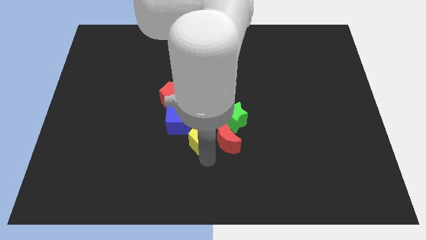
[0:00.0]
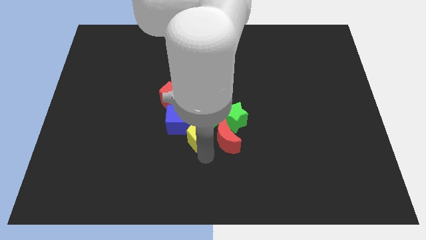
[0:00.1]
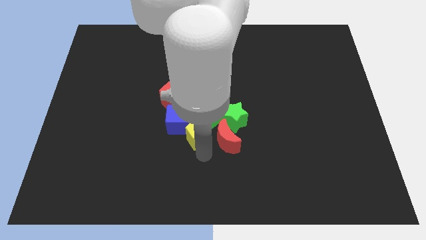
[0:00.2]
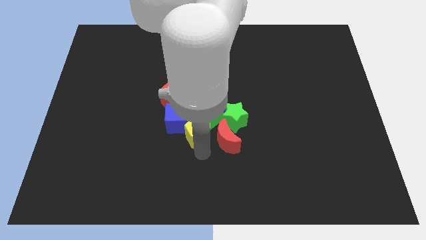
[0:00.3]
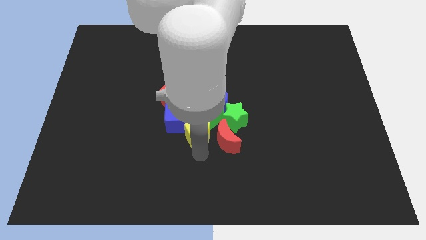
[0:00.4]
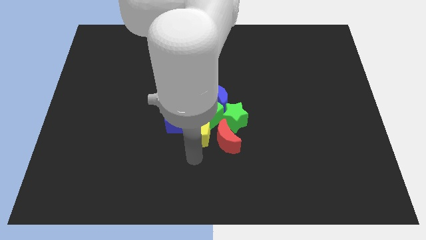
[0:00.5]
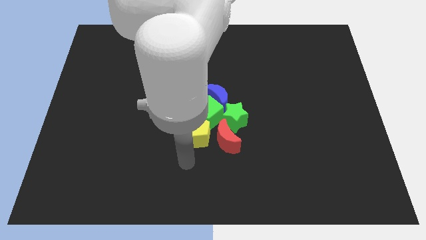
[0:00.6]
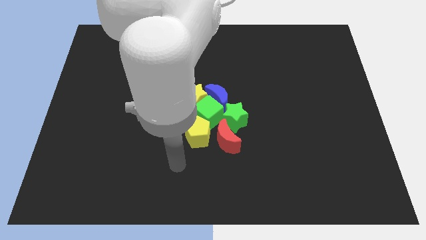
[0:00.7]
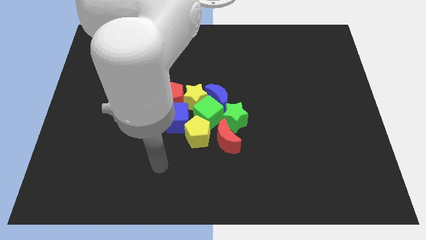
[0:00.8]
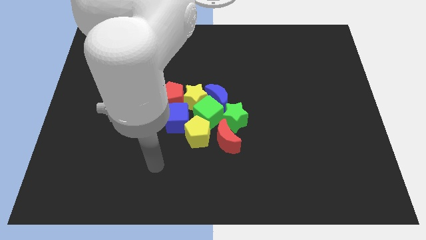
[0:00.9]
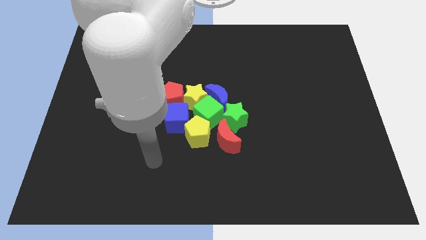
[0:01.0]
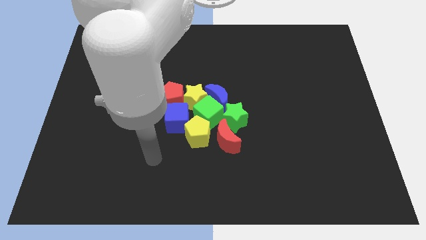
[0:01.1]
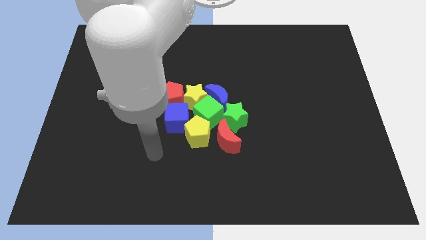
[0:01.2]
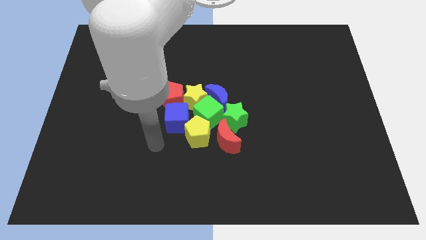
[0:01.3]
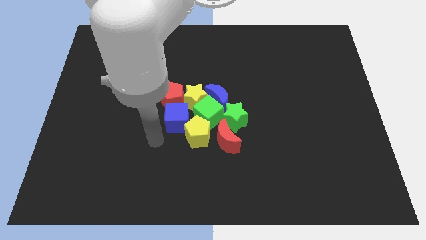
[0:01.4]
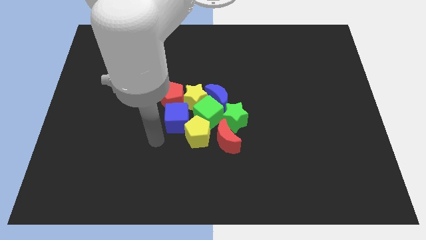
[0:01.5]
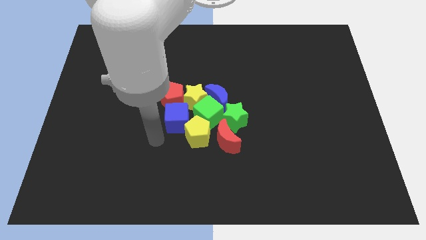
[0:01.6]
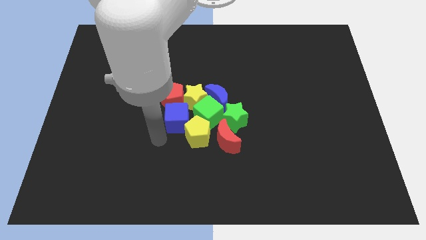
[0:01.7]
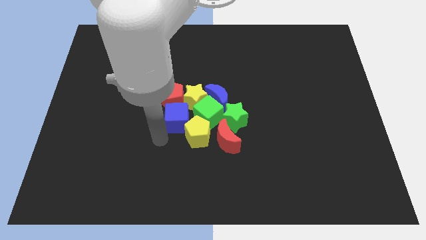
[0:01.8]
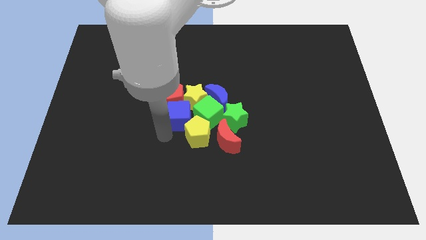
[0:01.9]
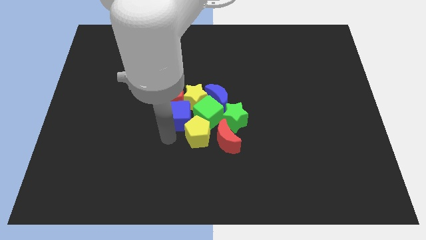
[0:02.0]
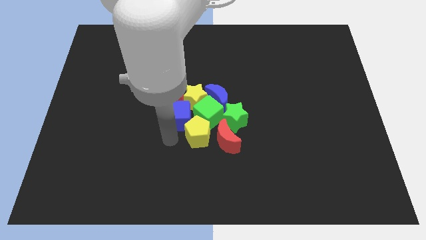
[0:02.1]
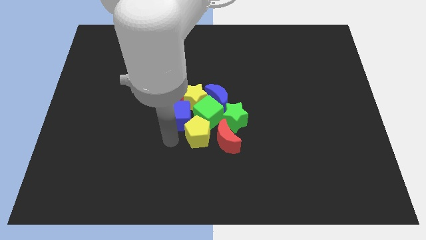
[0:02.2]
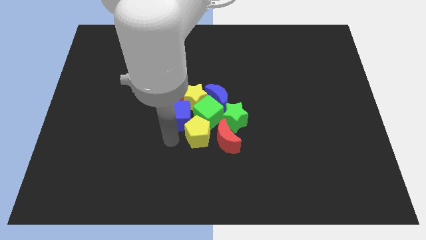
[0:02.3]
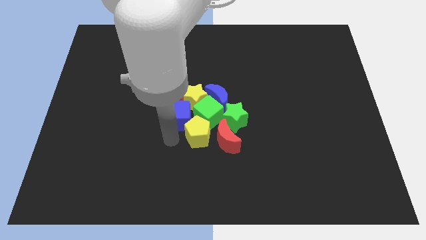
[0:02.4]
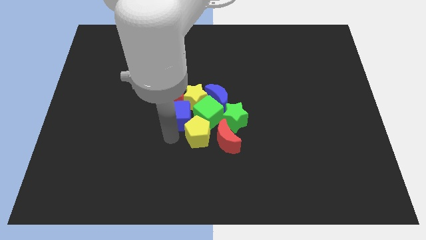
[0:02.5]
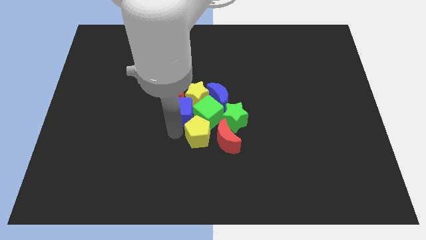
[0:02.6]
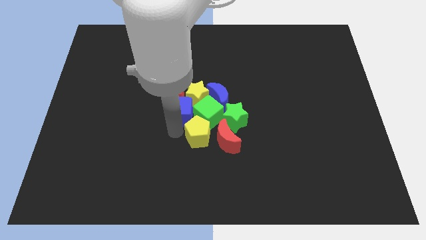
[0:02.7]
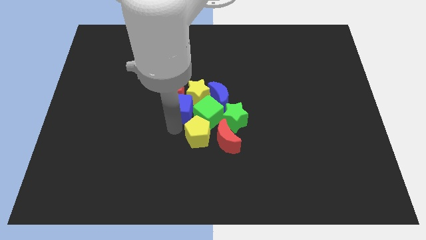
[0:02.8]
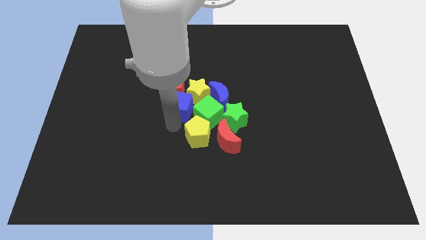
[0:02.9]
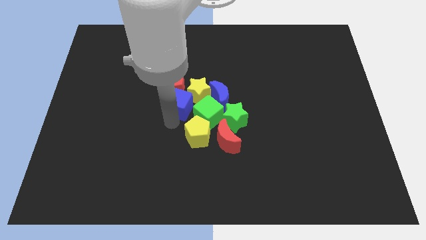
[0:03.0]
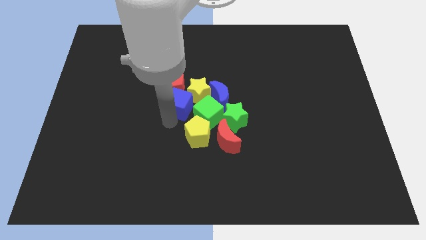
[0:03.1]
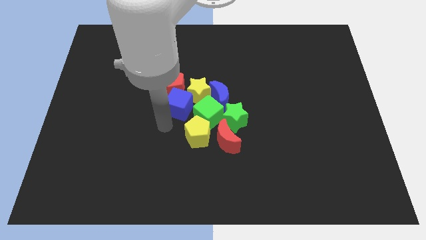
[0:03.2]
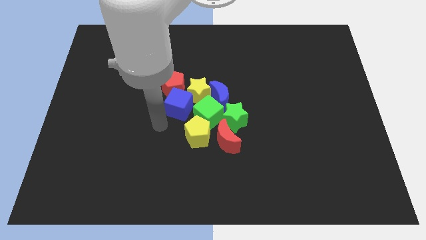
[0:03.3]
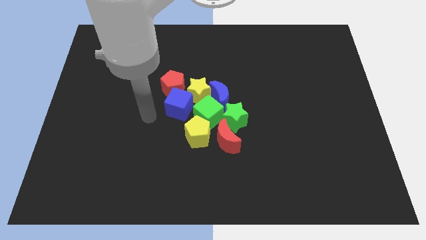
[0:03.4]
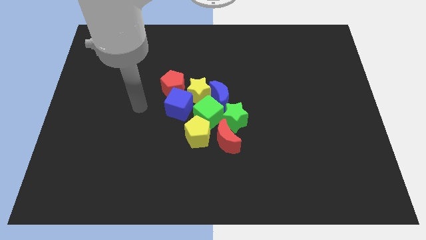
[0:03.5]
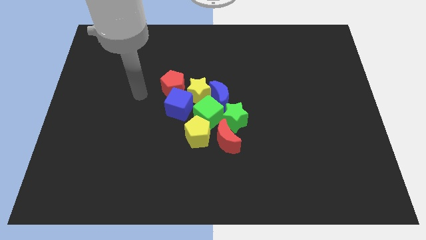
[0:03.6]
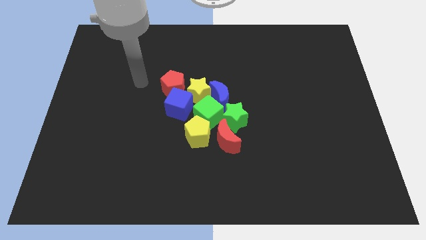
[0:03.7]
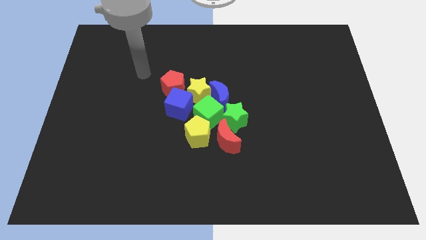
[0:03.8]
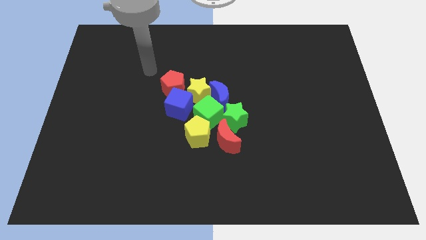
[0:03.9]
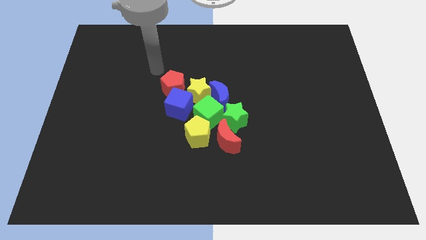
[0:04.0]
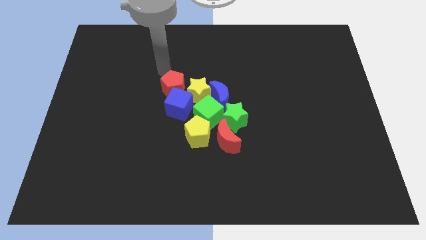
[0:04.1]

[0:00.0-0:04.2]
move the blue cube to the center

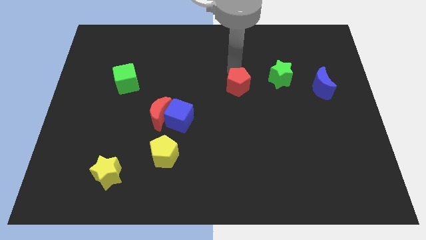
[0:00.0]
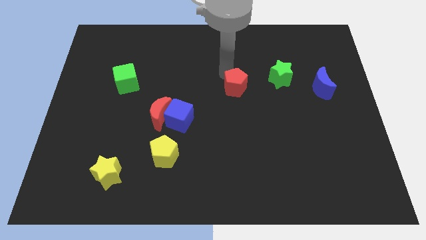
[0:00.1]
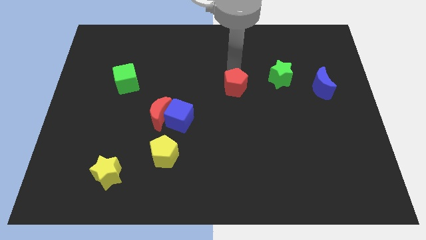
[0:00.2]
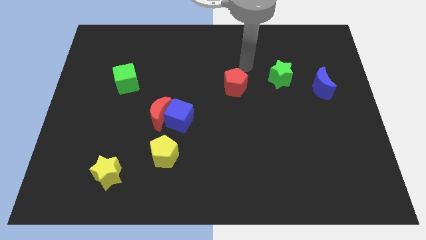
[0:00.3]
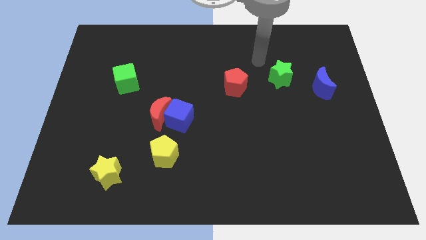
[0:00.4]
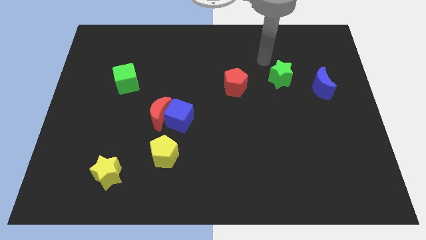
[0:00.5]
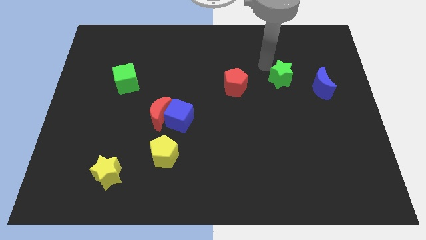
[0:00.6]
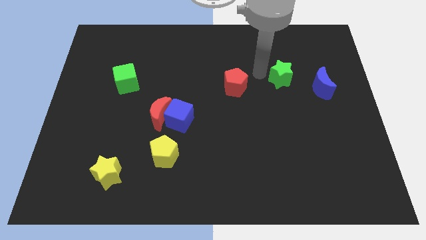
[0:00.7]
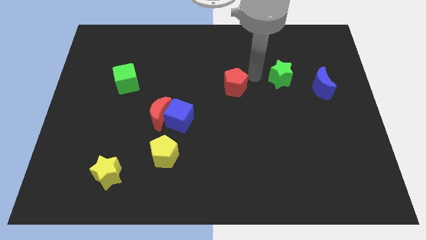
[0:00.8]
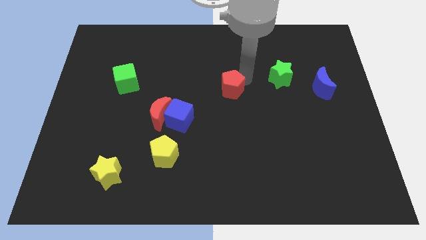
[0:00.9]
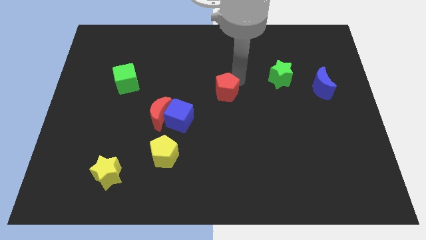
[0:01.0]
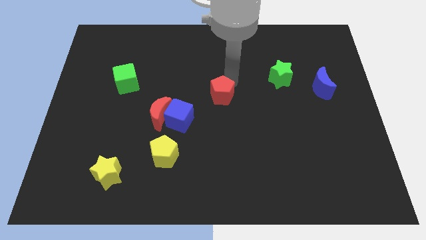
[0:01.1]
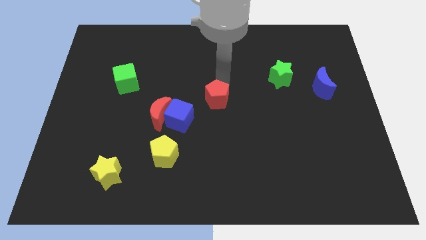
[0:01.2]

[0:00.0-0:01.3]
move the red pentagon to the center of the board

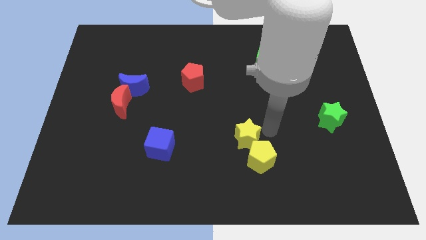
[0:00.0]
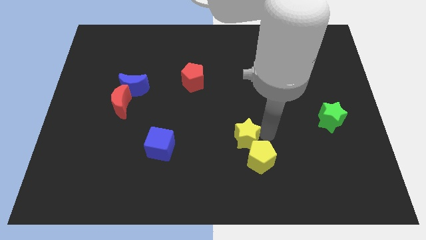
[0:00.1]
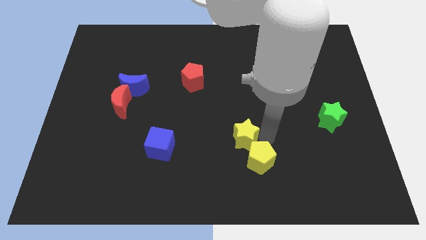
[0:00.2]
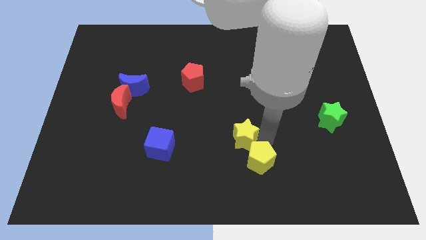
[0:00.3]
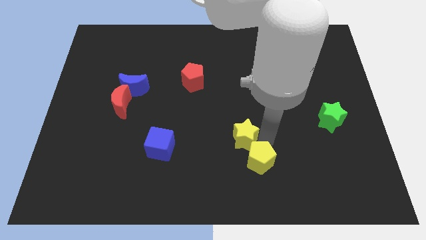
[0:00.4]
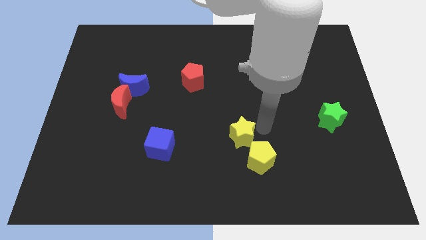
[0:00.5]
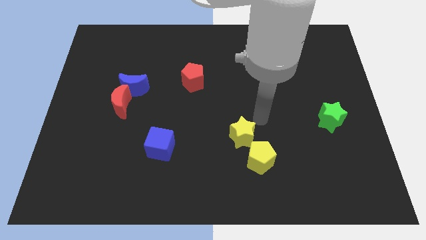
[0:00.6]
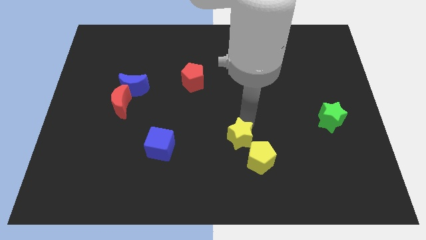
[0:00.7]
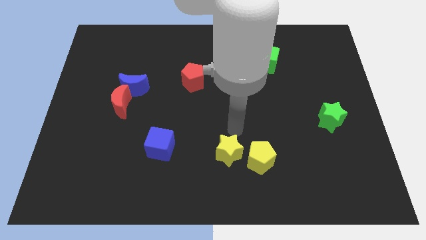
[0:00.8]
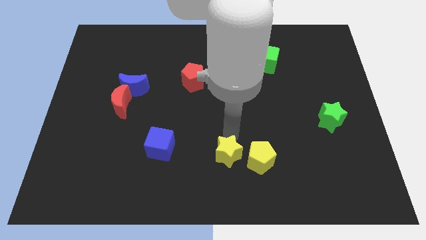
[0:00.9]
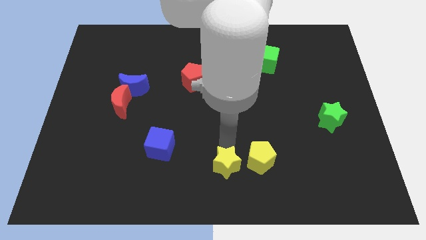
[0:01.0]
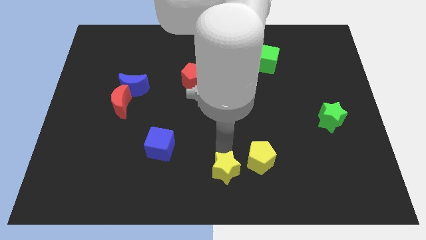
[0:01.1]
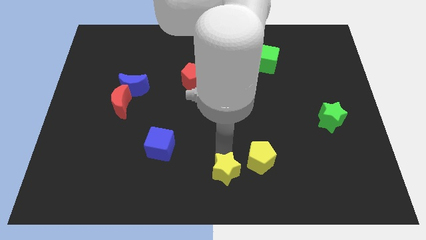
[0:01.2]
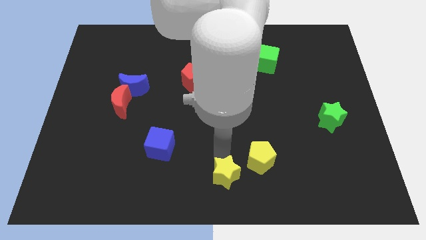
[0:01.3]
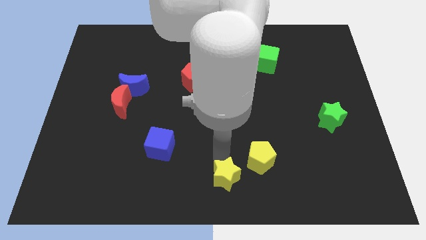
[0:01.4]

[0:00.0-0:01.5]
separate the yellow star and yellow pentagon

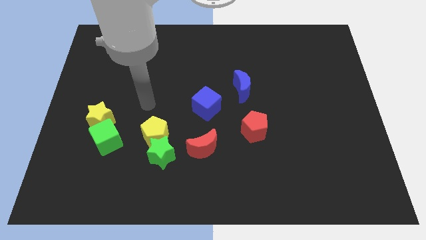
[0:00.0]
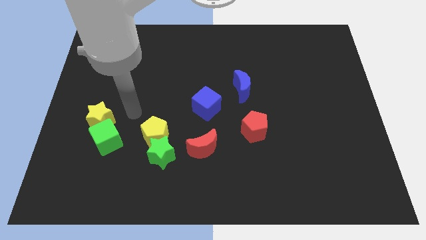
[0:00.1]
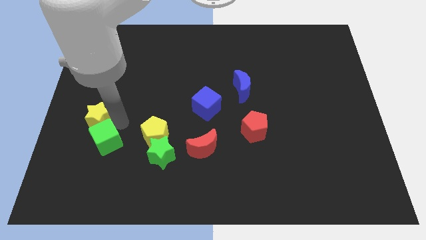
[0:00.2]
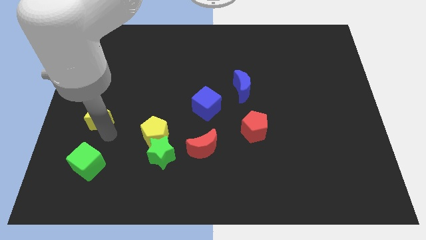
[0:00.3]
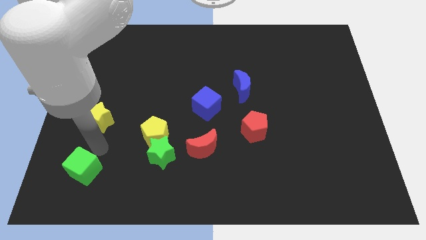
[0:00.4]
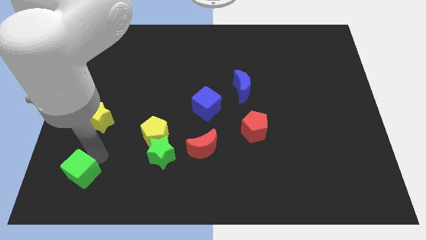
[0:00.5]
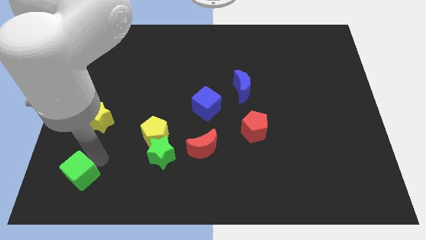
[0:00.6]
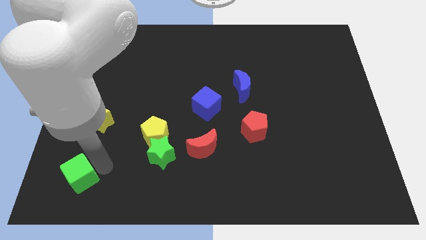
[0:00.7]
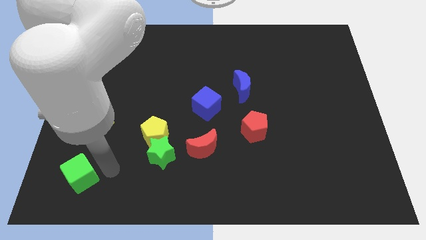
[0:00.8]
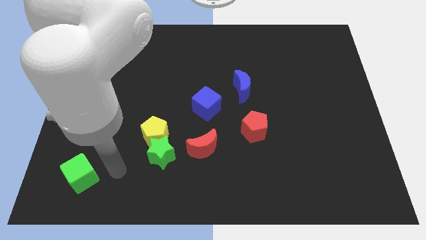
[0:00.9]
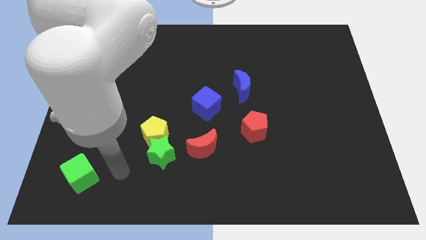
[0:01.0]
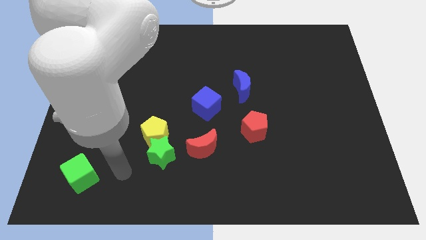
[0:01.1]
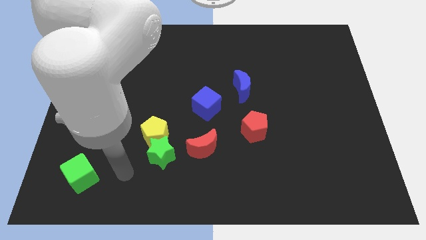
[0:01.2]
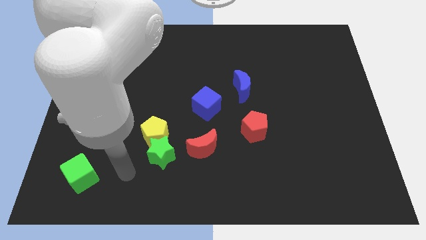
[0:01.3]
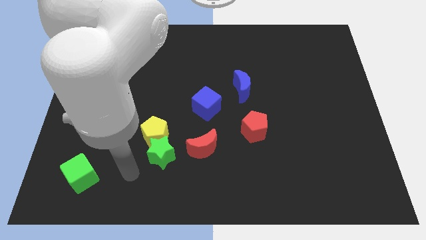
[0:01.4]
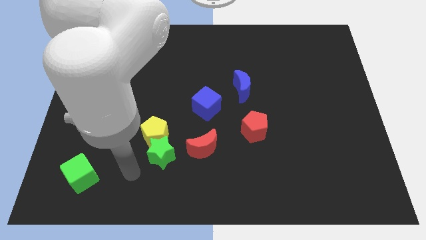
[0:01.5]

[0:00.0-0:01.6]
push the green cube to the bottom left corner of the board

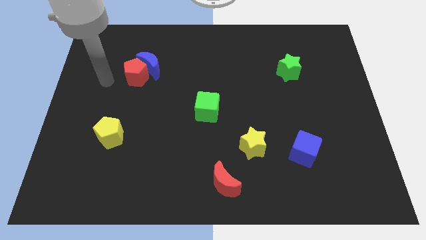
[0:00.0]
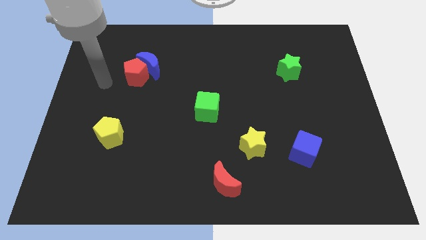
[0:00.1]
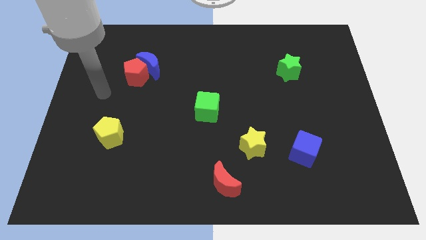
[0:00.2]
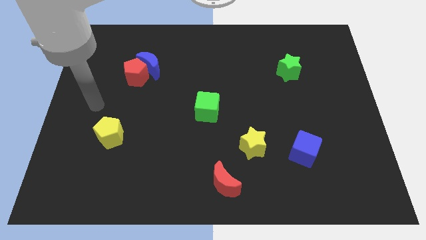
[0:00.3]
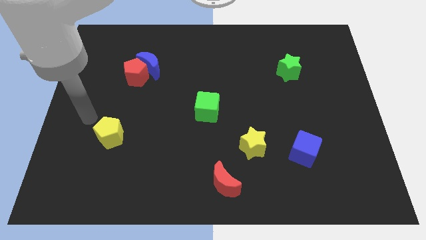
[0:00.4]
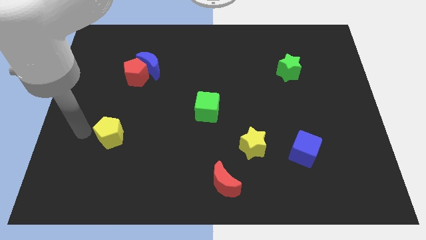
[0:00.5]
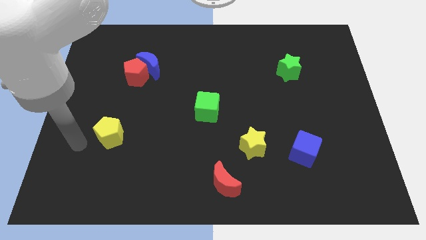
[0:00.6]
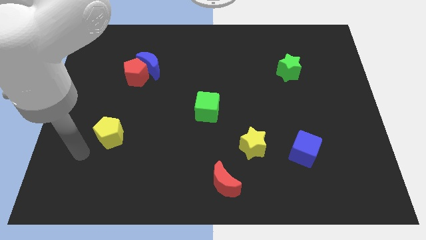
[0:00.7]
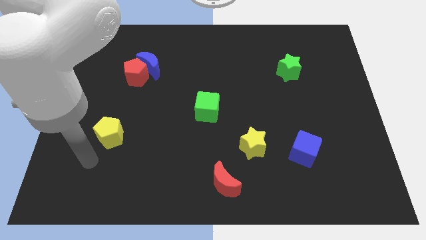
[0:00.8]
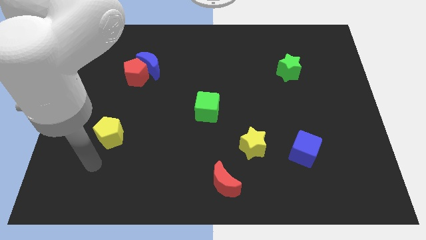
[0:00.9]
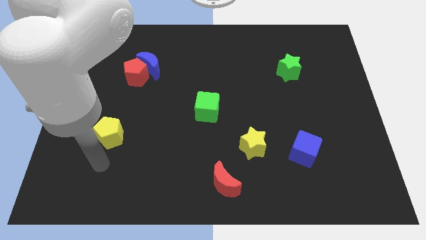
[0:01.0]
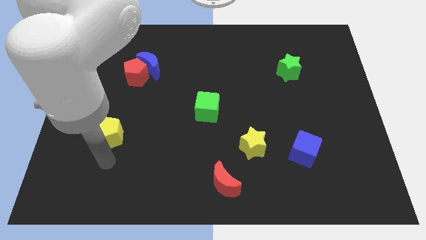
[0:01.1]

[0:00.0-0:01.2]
point your hand below the yellow pentagon
